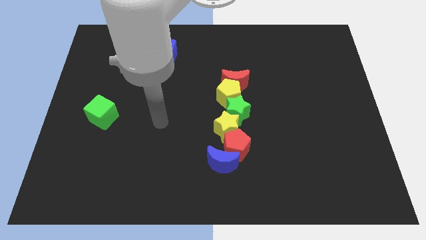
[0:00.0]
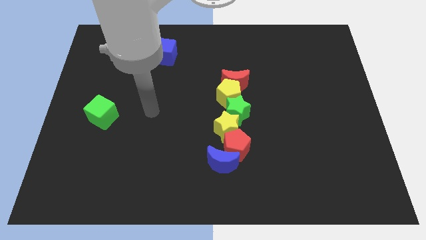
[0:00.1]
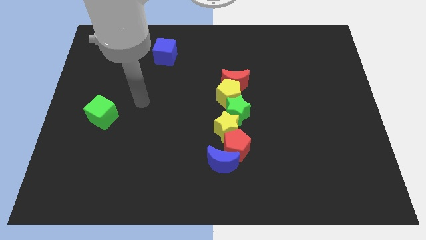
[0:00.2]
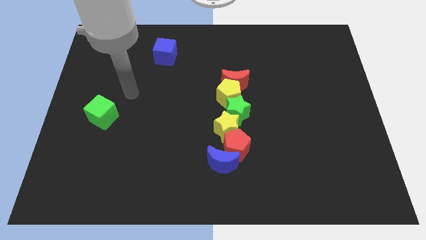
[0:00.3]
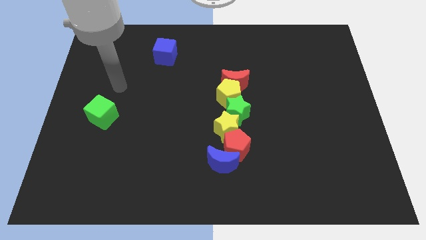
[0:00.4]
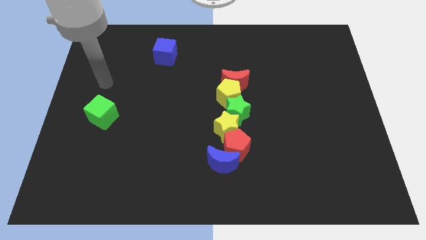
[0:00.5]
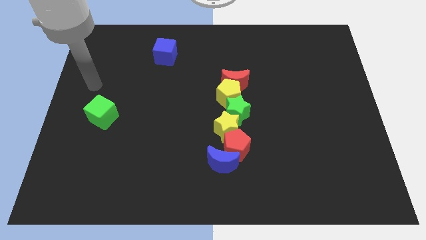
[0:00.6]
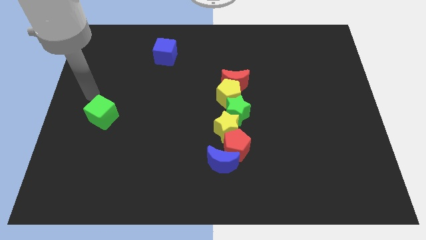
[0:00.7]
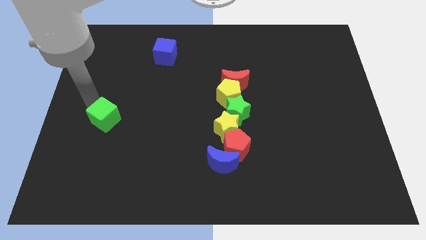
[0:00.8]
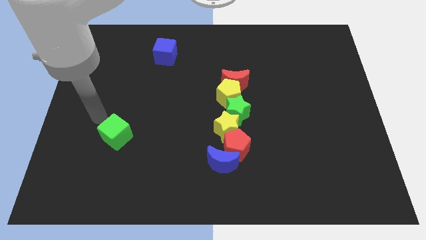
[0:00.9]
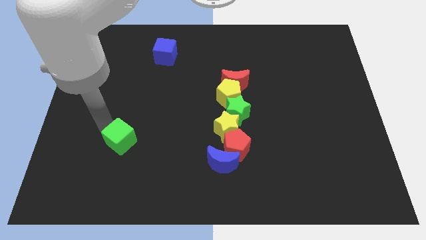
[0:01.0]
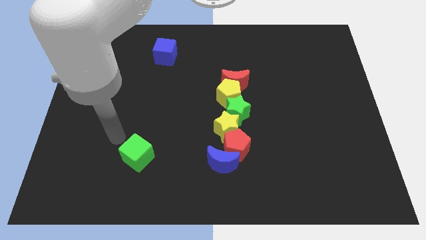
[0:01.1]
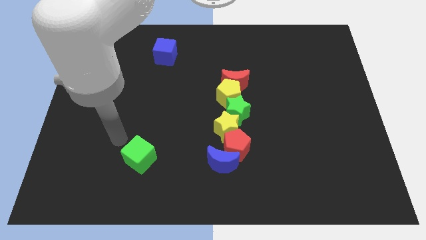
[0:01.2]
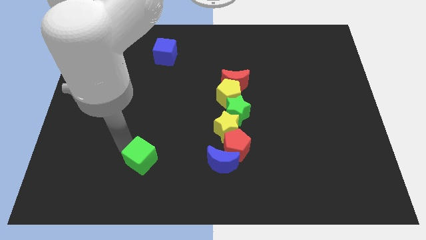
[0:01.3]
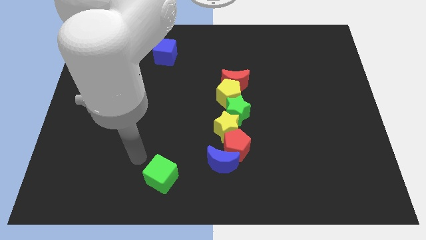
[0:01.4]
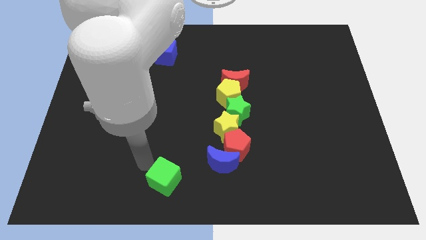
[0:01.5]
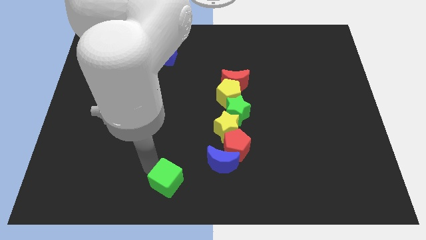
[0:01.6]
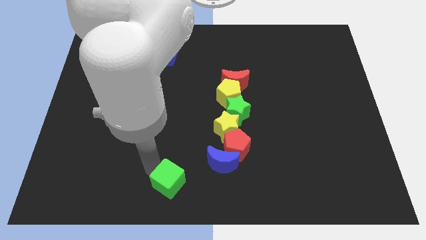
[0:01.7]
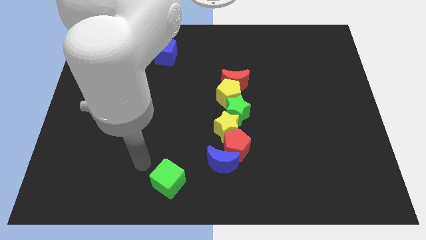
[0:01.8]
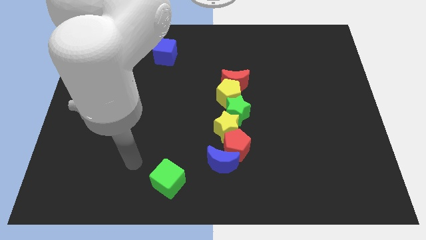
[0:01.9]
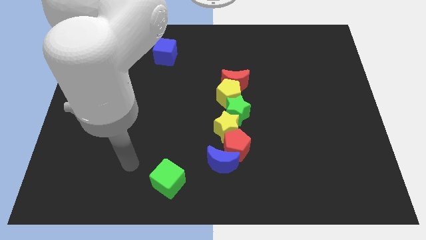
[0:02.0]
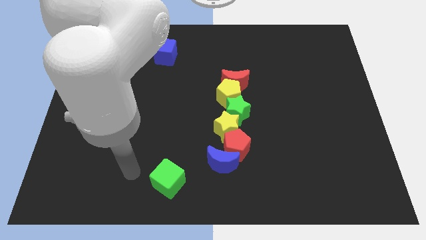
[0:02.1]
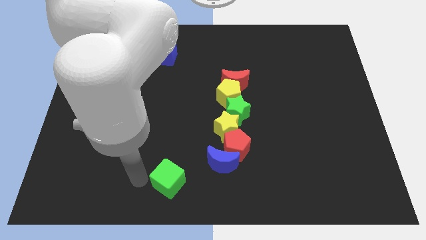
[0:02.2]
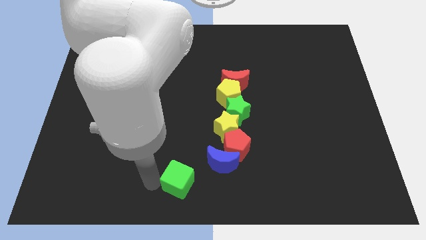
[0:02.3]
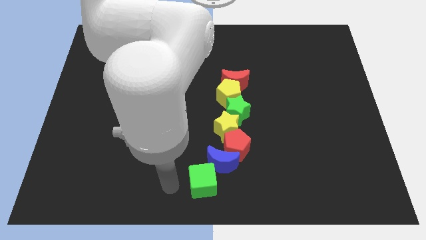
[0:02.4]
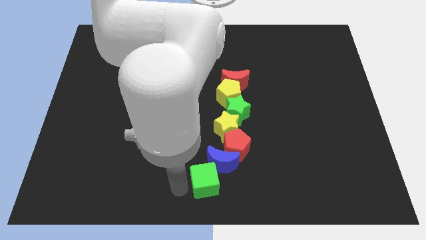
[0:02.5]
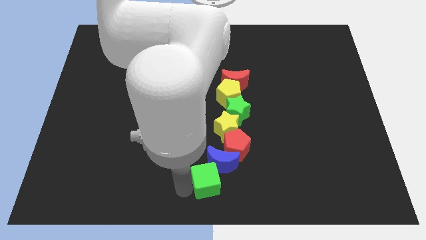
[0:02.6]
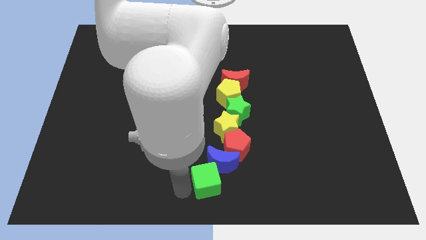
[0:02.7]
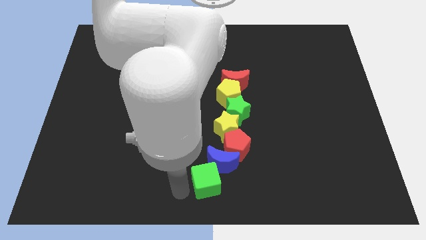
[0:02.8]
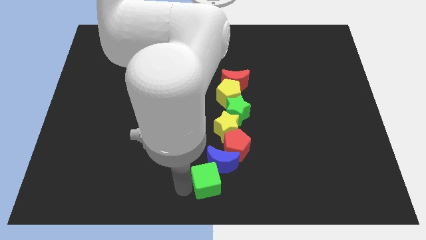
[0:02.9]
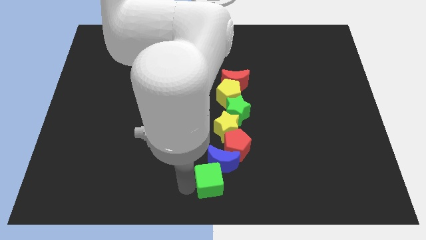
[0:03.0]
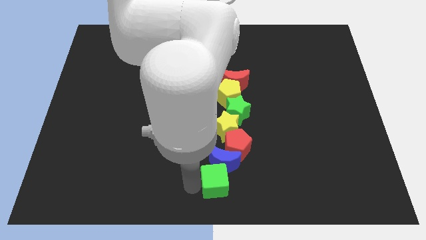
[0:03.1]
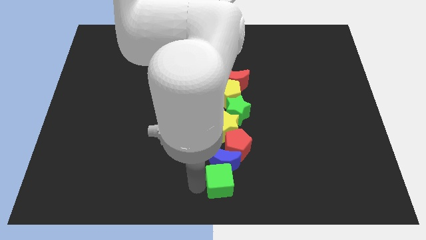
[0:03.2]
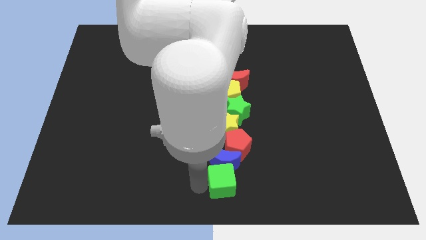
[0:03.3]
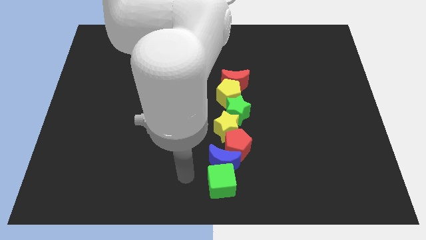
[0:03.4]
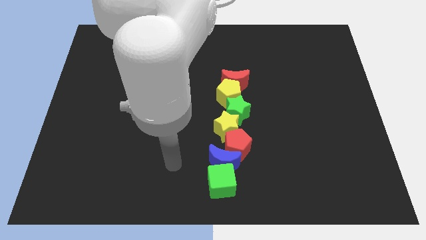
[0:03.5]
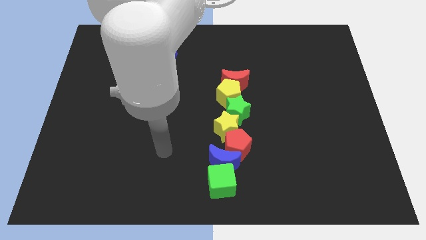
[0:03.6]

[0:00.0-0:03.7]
place the green cube vertically below the blue moon

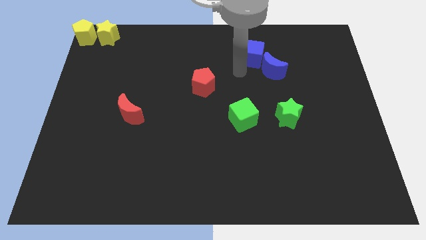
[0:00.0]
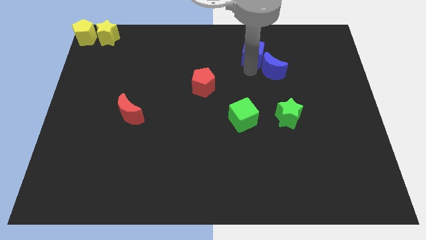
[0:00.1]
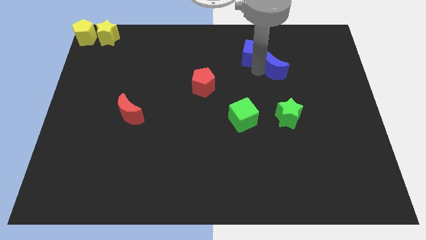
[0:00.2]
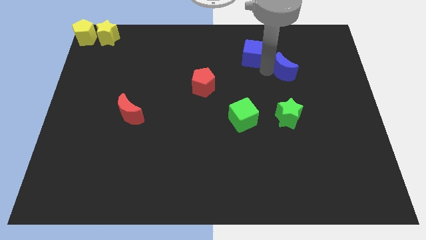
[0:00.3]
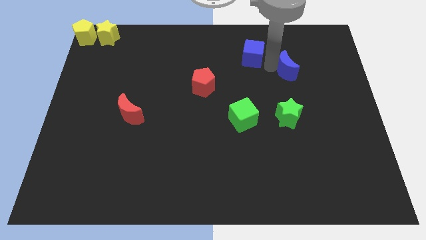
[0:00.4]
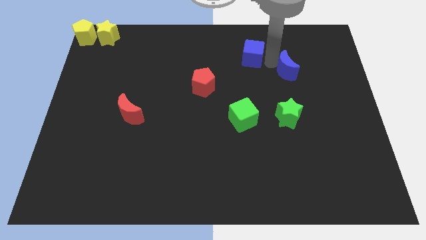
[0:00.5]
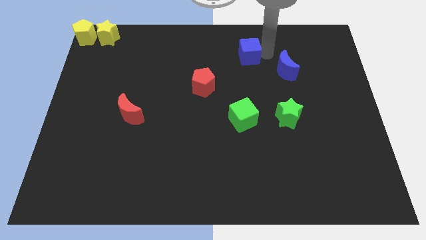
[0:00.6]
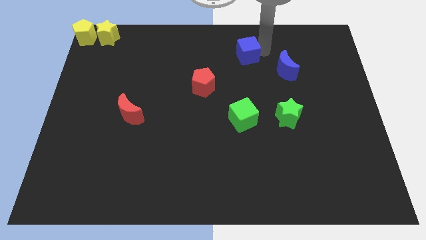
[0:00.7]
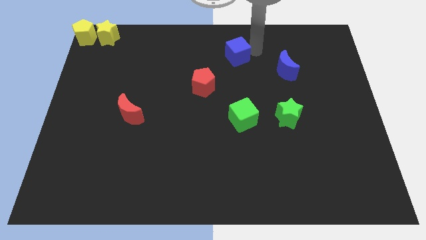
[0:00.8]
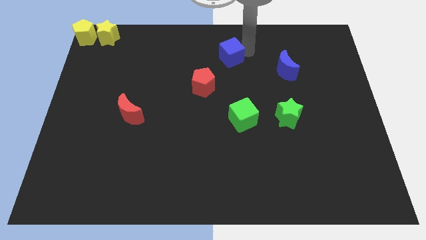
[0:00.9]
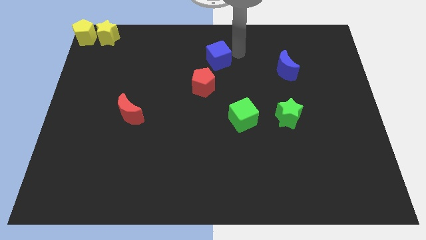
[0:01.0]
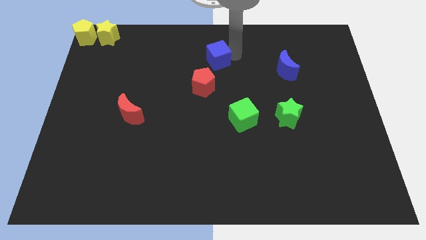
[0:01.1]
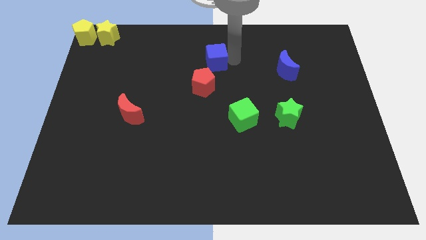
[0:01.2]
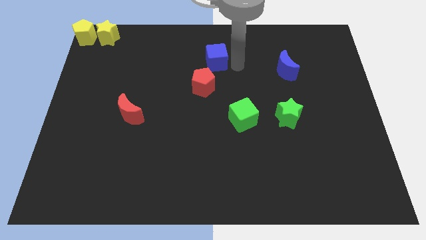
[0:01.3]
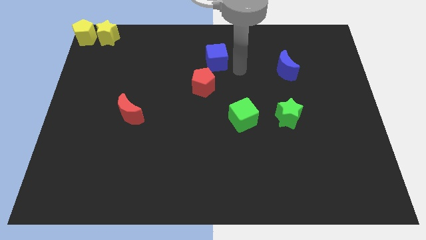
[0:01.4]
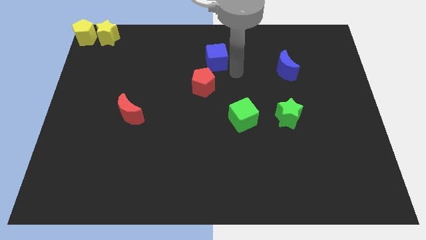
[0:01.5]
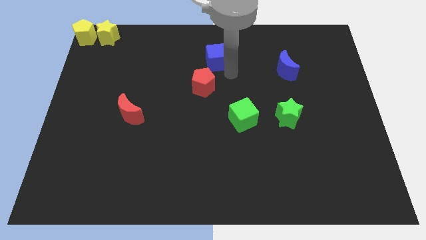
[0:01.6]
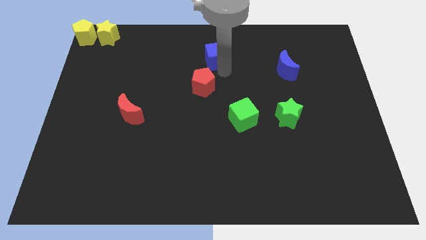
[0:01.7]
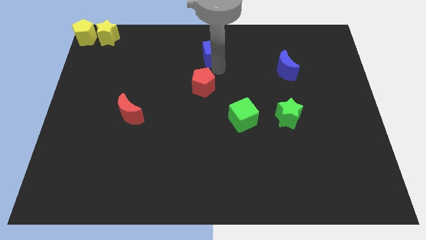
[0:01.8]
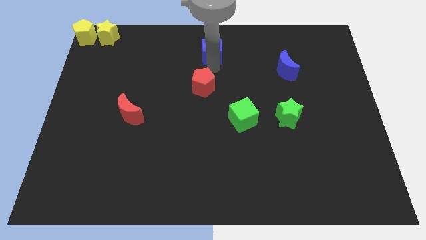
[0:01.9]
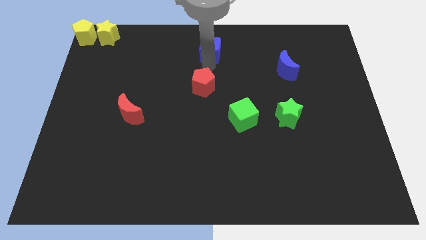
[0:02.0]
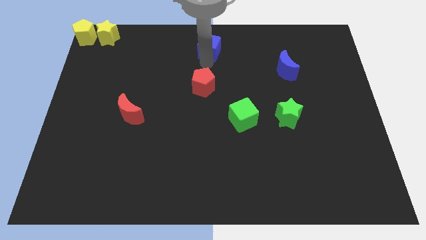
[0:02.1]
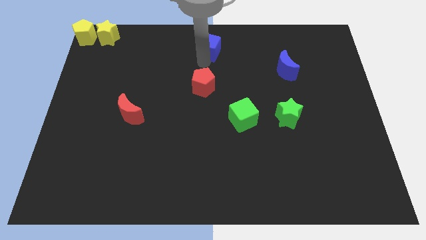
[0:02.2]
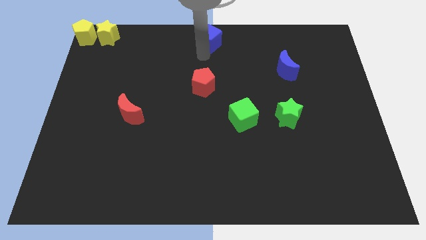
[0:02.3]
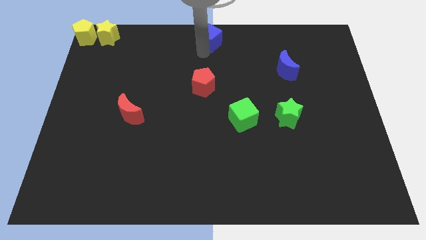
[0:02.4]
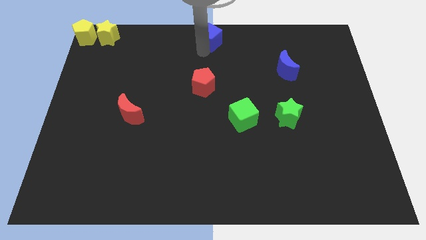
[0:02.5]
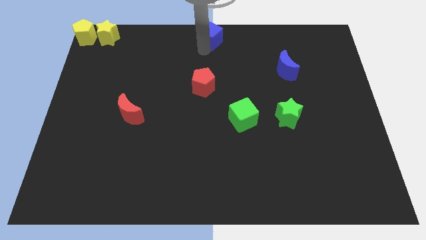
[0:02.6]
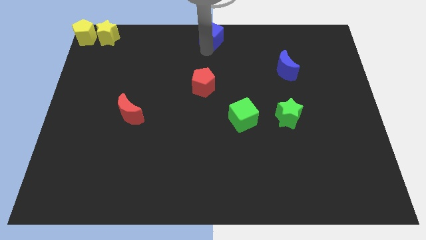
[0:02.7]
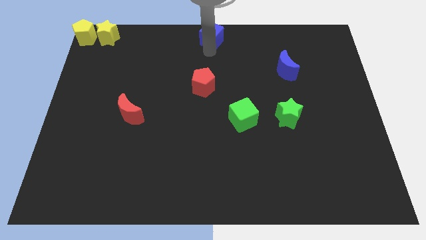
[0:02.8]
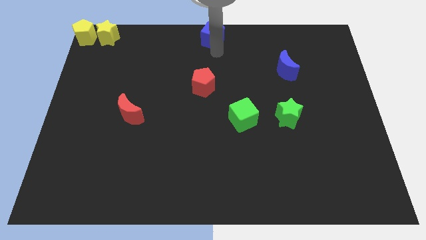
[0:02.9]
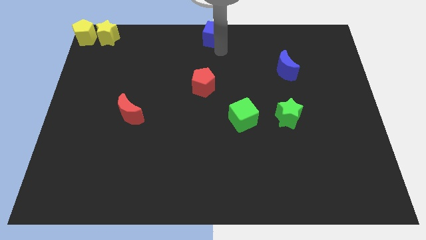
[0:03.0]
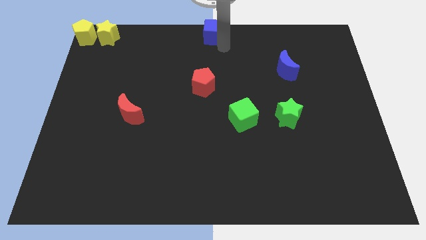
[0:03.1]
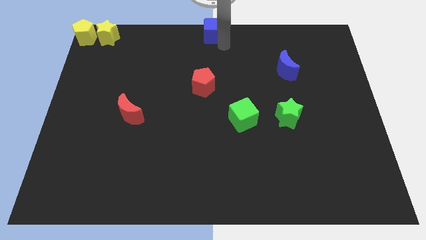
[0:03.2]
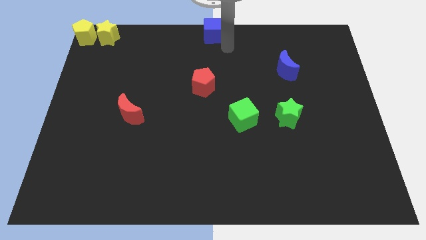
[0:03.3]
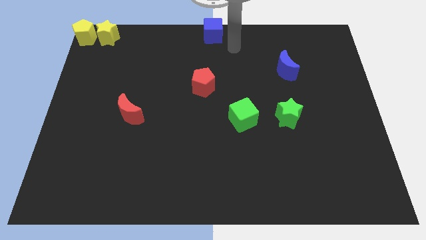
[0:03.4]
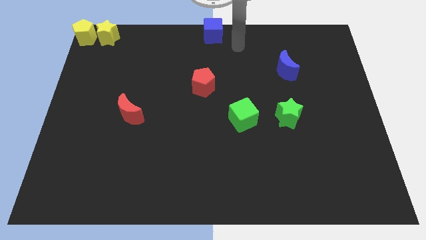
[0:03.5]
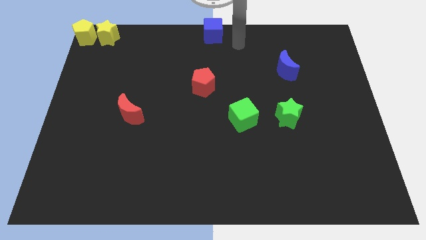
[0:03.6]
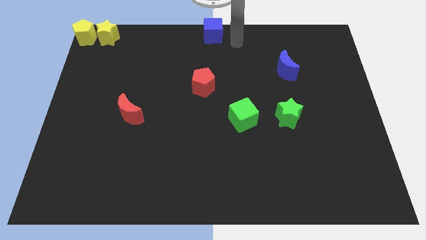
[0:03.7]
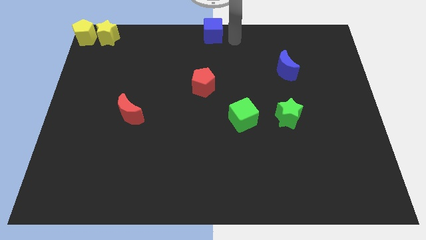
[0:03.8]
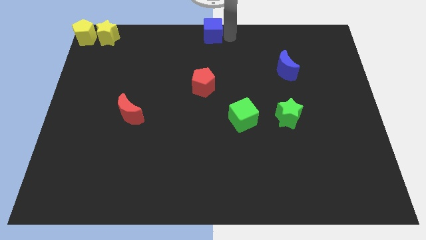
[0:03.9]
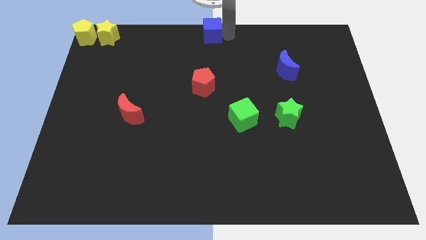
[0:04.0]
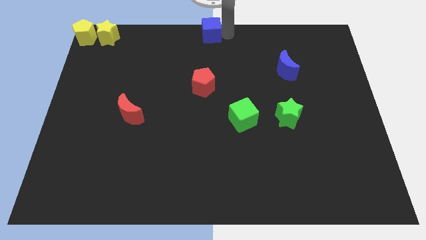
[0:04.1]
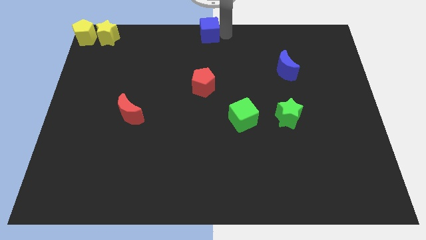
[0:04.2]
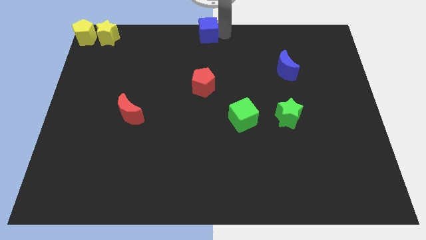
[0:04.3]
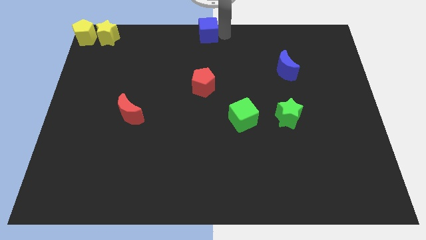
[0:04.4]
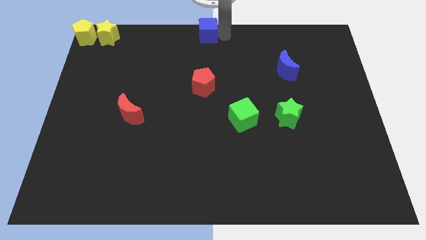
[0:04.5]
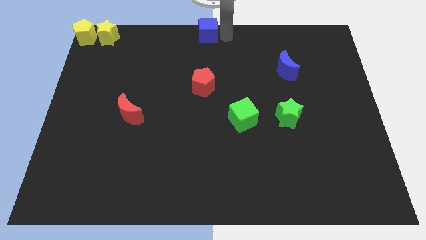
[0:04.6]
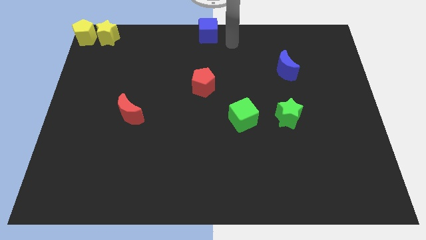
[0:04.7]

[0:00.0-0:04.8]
move the blue block to the top center

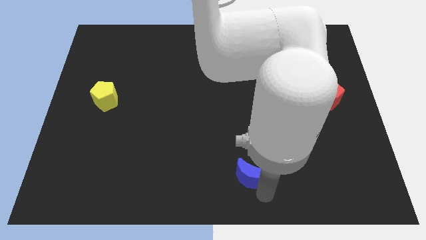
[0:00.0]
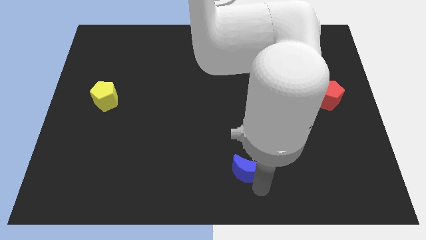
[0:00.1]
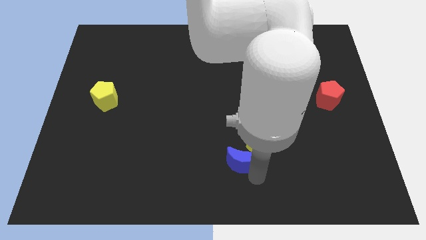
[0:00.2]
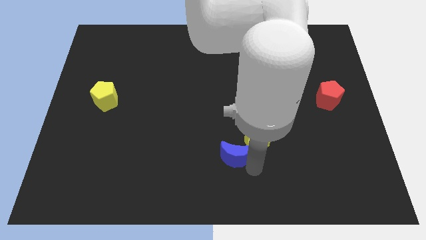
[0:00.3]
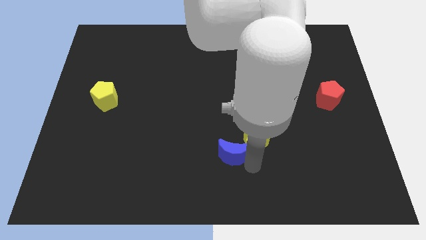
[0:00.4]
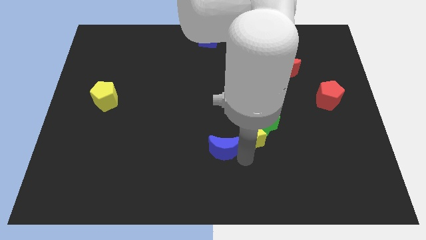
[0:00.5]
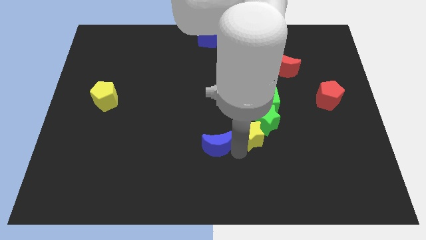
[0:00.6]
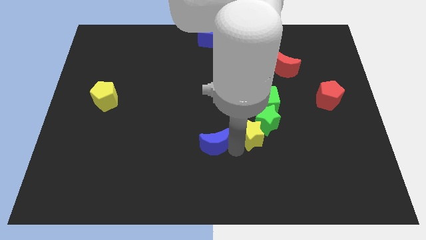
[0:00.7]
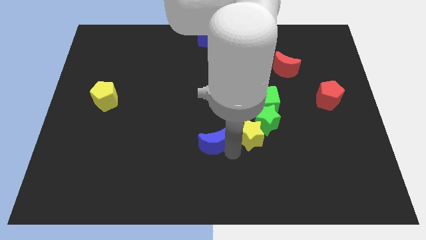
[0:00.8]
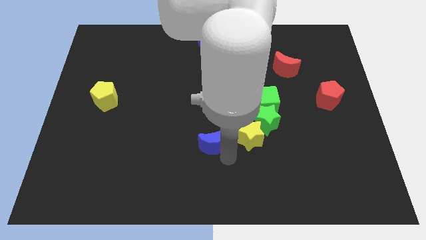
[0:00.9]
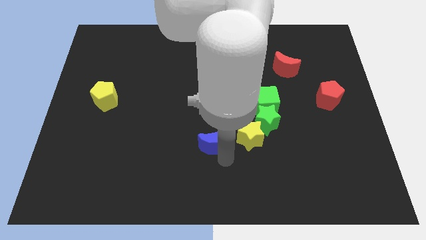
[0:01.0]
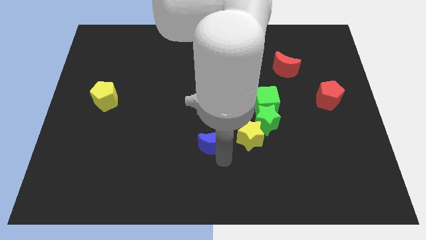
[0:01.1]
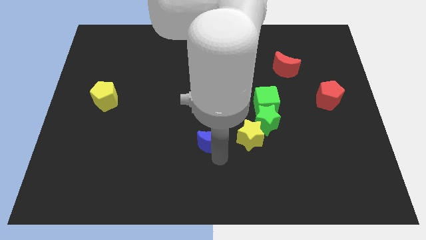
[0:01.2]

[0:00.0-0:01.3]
push blue moon upwards
